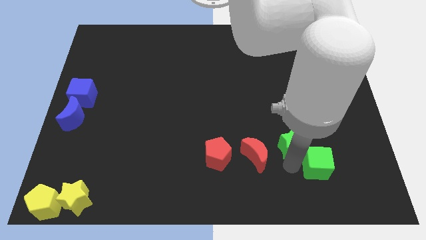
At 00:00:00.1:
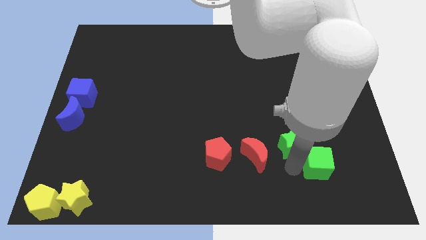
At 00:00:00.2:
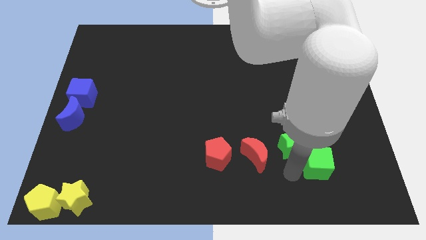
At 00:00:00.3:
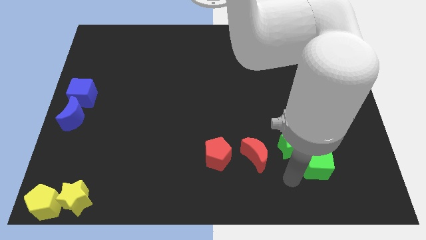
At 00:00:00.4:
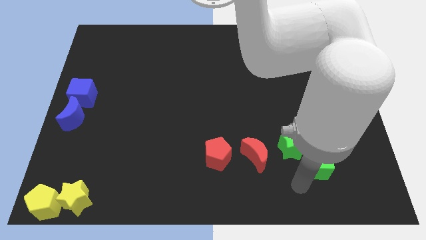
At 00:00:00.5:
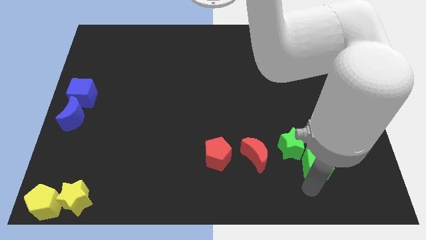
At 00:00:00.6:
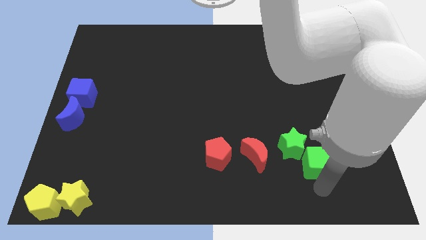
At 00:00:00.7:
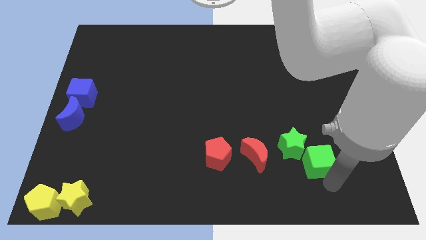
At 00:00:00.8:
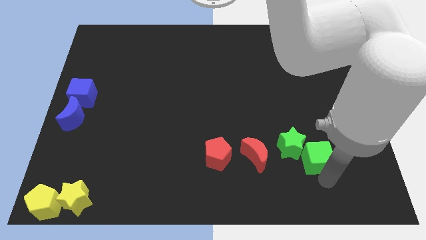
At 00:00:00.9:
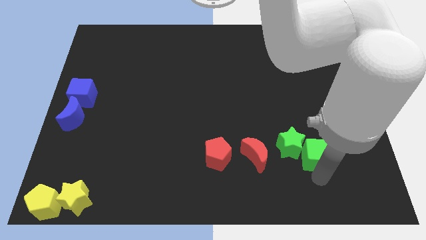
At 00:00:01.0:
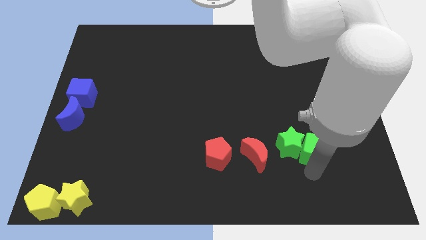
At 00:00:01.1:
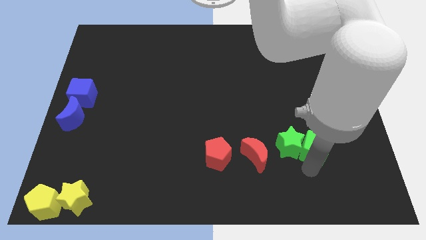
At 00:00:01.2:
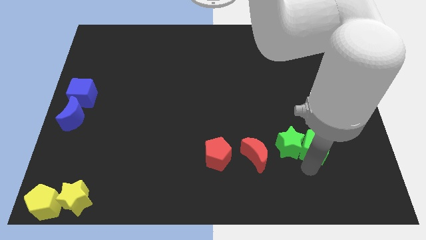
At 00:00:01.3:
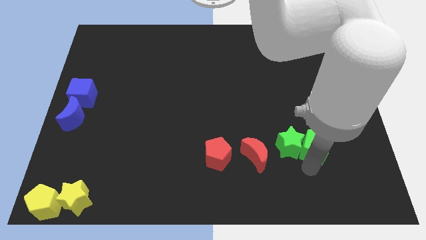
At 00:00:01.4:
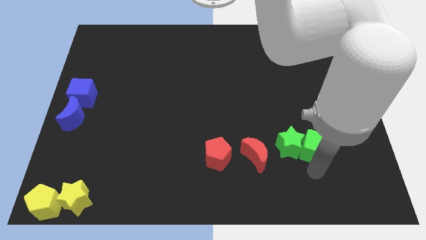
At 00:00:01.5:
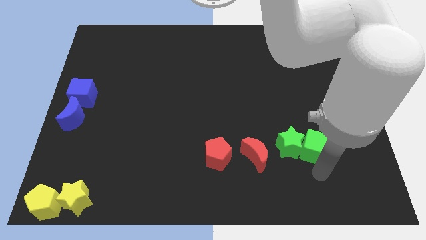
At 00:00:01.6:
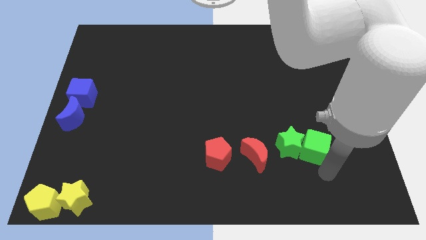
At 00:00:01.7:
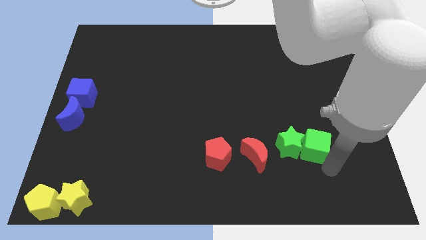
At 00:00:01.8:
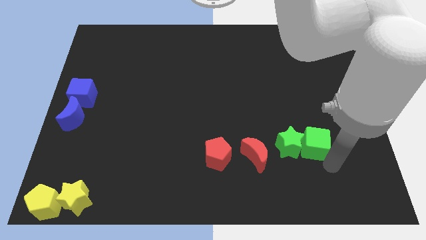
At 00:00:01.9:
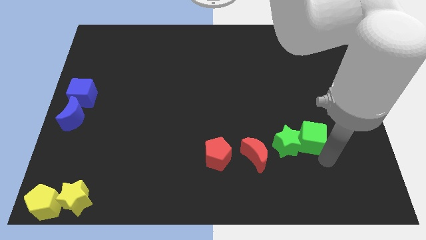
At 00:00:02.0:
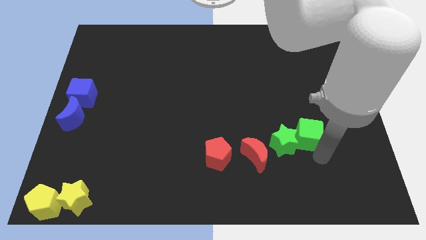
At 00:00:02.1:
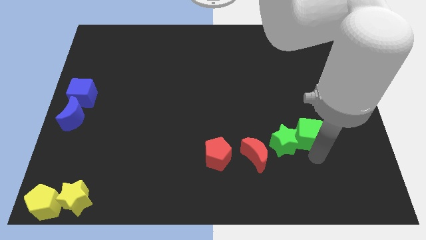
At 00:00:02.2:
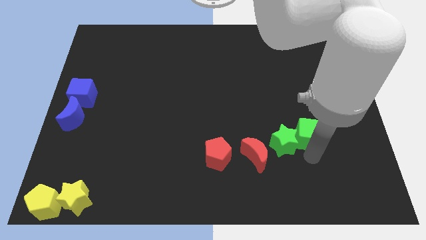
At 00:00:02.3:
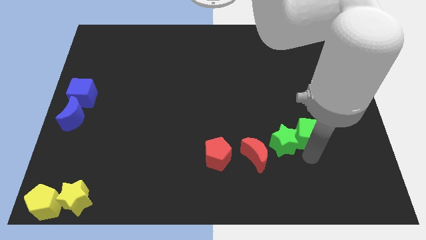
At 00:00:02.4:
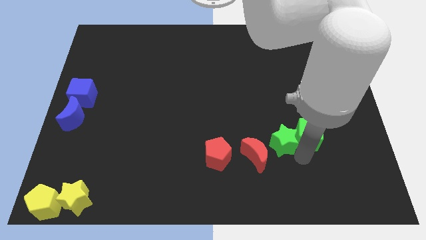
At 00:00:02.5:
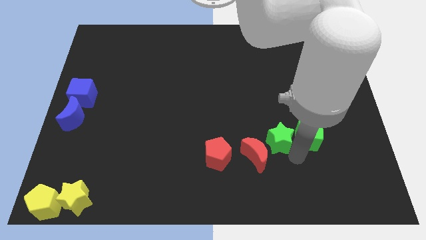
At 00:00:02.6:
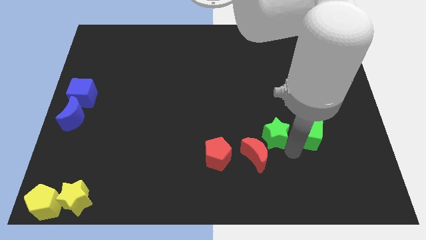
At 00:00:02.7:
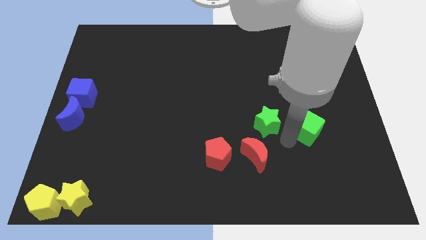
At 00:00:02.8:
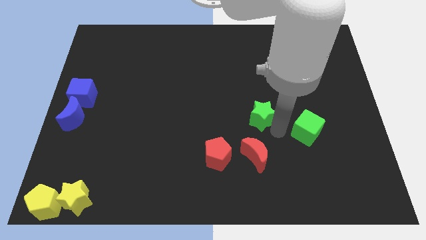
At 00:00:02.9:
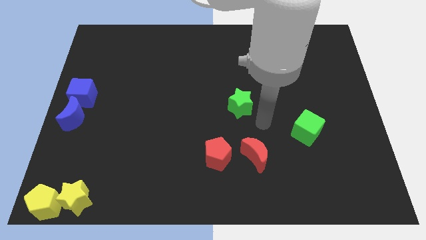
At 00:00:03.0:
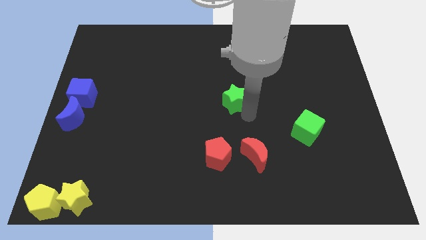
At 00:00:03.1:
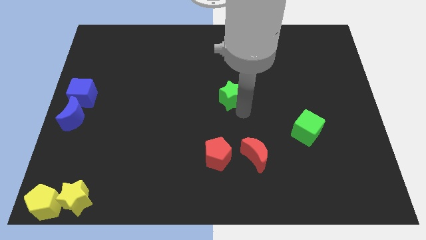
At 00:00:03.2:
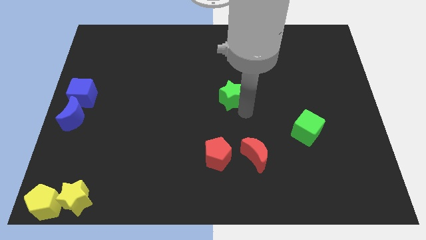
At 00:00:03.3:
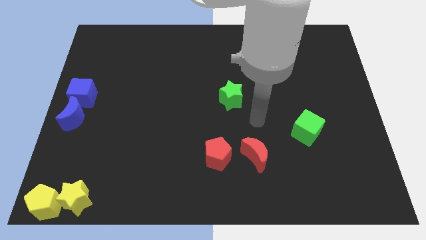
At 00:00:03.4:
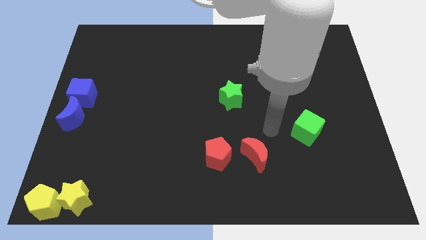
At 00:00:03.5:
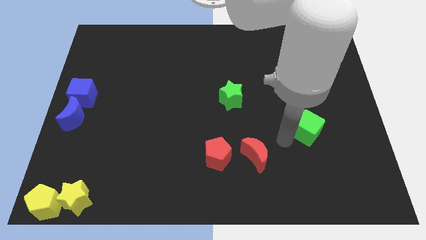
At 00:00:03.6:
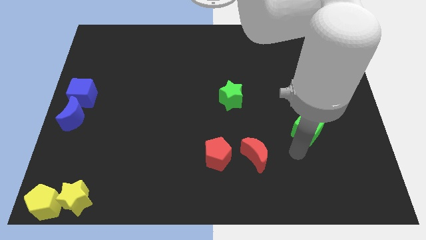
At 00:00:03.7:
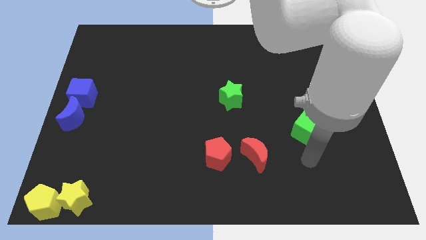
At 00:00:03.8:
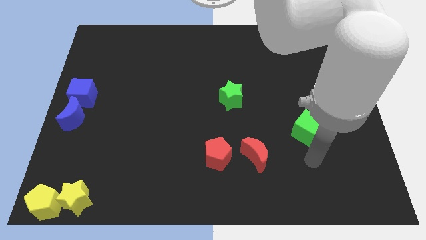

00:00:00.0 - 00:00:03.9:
separate the green star from the green cube

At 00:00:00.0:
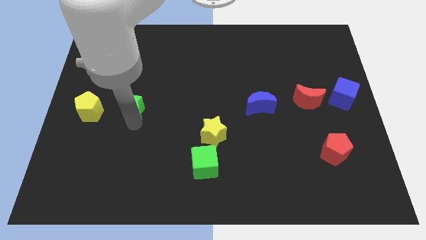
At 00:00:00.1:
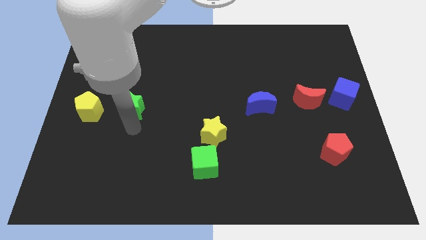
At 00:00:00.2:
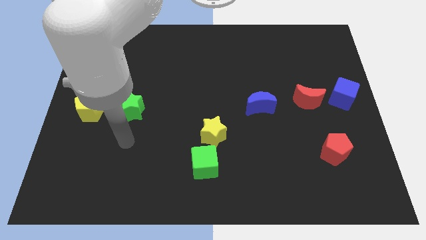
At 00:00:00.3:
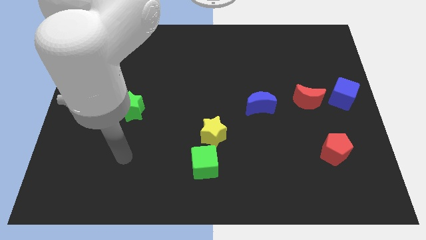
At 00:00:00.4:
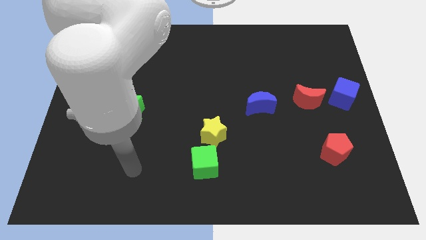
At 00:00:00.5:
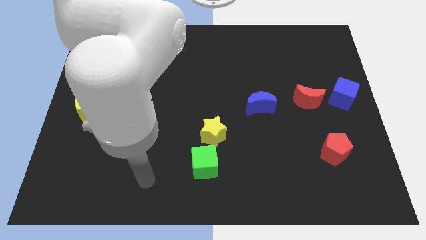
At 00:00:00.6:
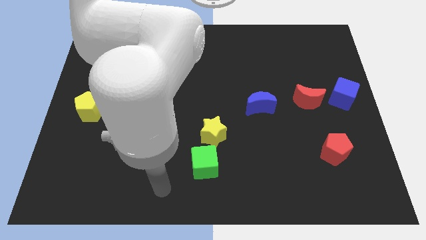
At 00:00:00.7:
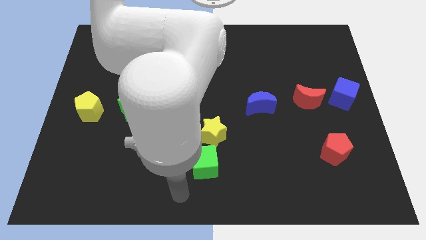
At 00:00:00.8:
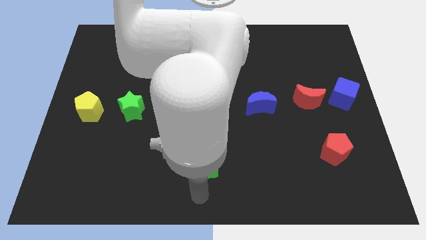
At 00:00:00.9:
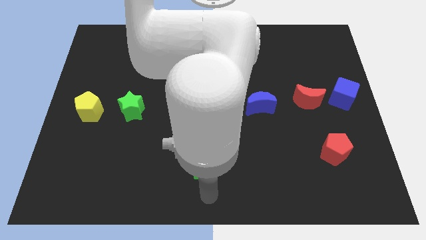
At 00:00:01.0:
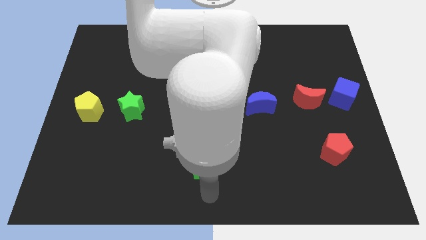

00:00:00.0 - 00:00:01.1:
move your arm away from the green star

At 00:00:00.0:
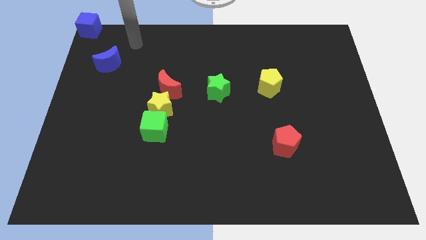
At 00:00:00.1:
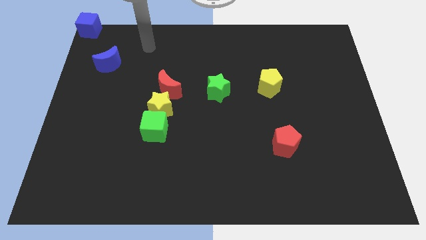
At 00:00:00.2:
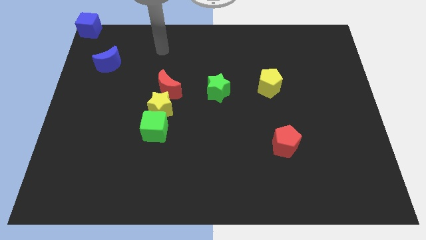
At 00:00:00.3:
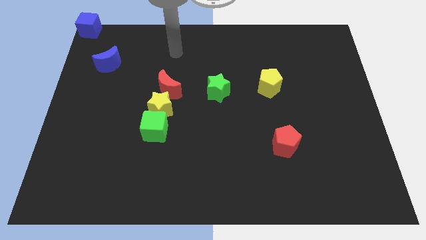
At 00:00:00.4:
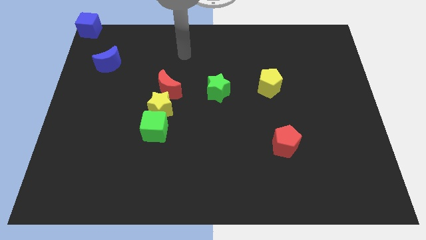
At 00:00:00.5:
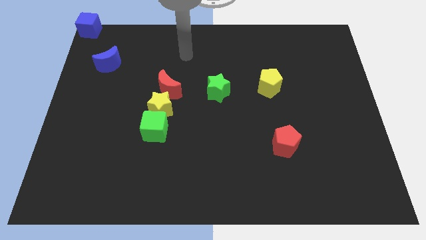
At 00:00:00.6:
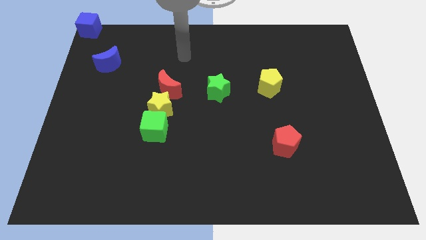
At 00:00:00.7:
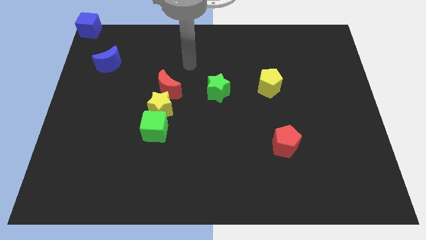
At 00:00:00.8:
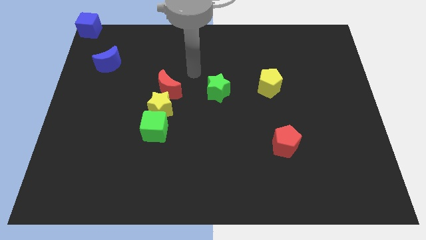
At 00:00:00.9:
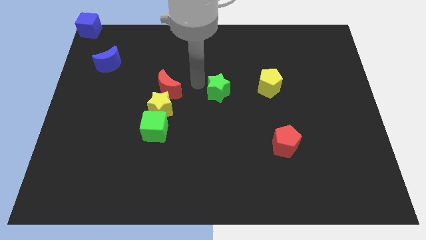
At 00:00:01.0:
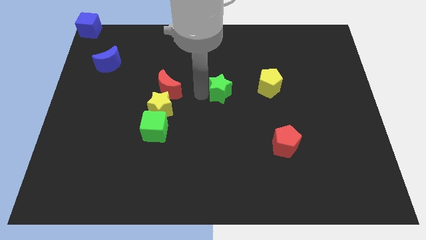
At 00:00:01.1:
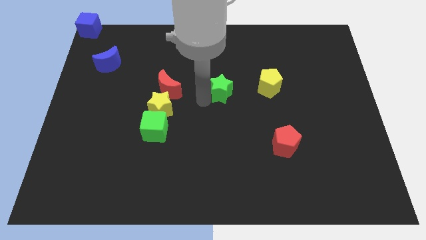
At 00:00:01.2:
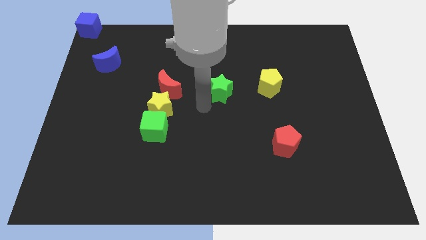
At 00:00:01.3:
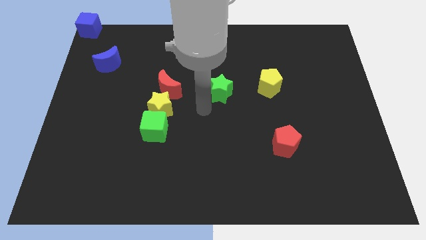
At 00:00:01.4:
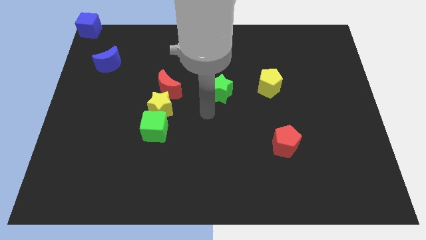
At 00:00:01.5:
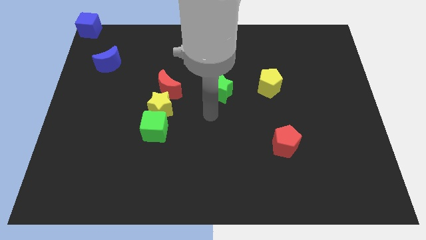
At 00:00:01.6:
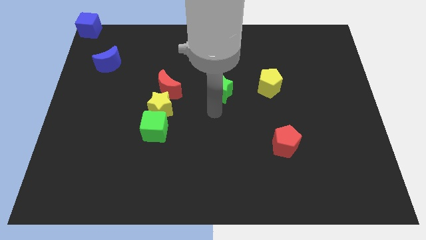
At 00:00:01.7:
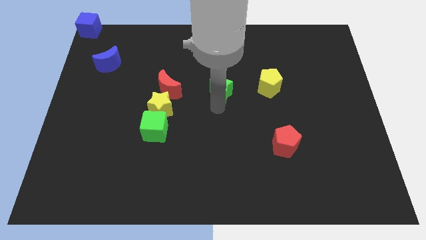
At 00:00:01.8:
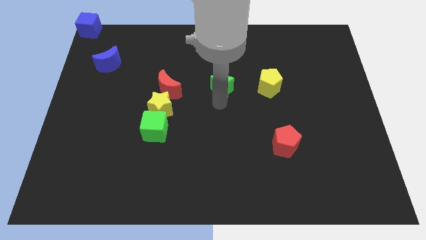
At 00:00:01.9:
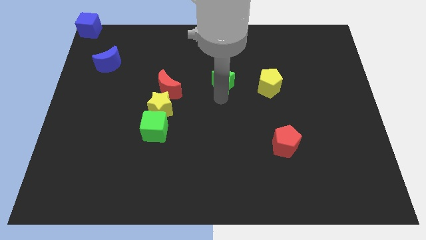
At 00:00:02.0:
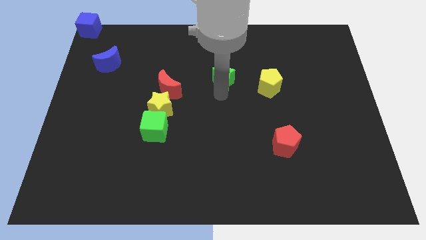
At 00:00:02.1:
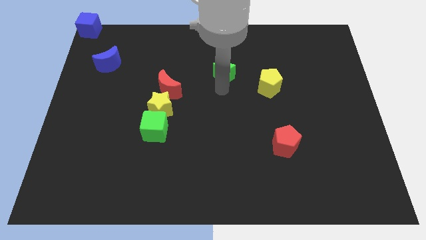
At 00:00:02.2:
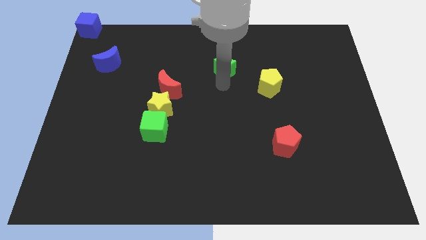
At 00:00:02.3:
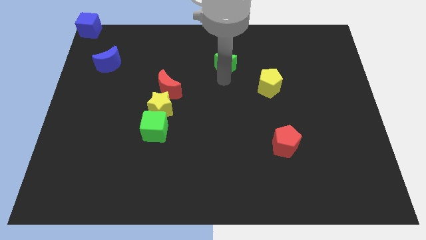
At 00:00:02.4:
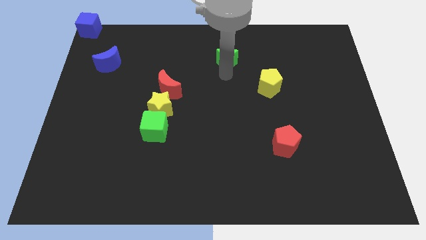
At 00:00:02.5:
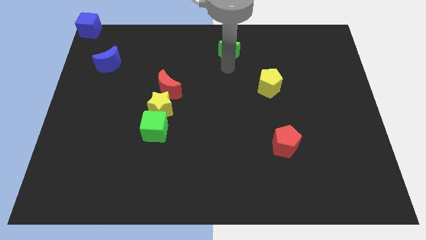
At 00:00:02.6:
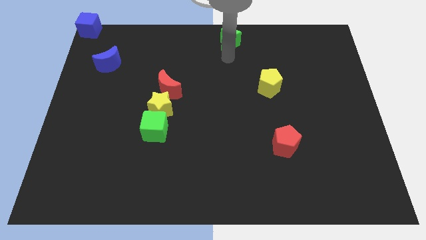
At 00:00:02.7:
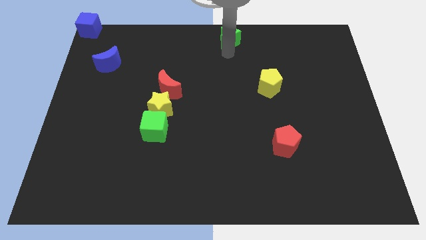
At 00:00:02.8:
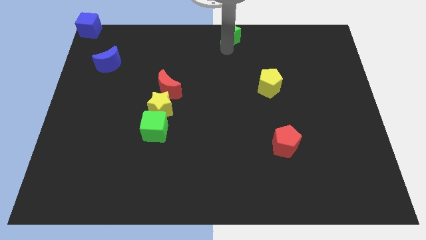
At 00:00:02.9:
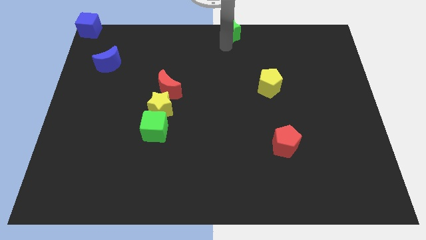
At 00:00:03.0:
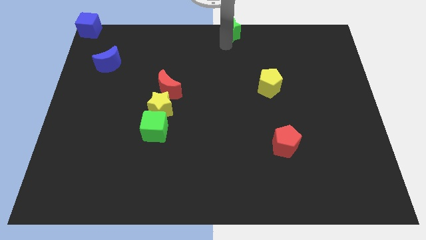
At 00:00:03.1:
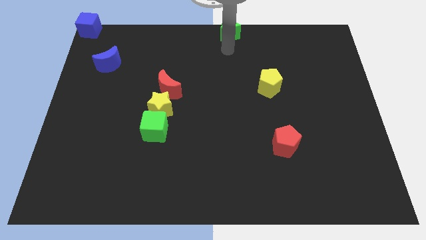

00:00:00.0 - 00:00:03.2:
place the green star at the top center of the board

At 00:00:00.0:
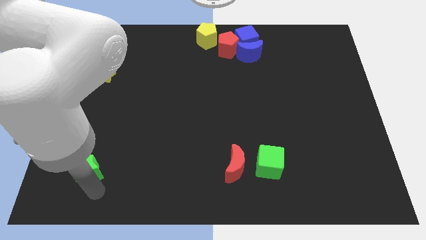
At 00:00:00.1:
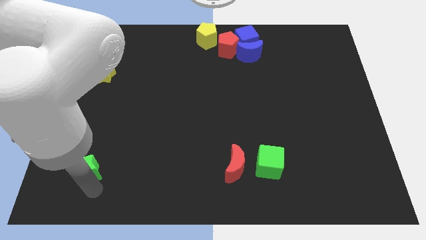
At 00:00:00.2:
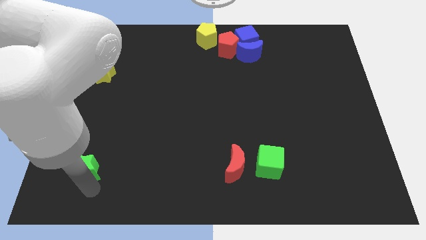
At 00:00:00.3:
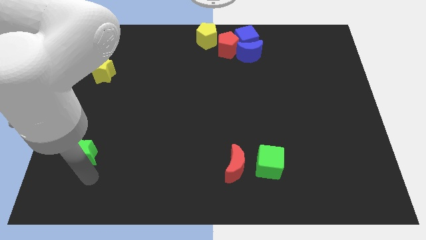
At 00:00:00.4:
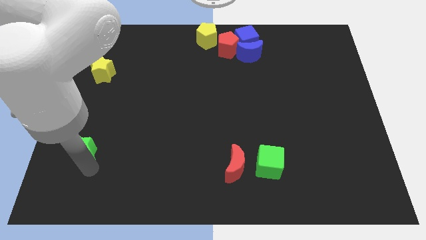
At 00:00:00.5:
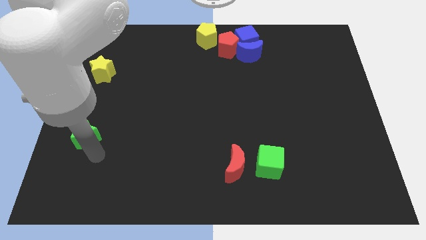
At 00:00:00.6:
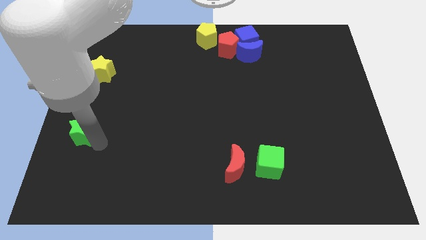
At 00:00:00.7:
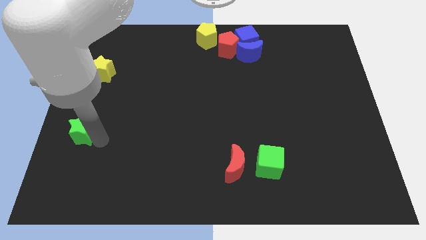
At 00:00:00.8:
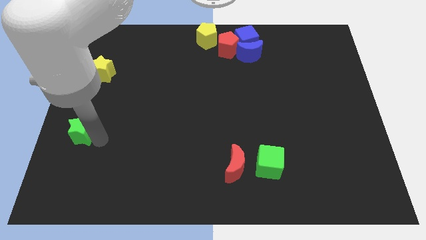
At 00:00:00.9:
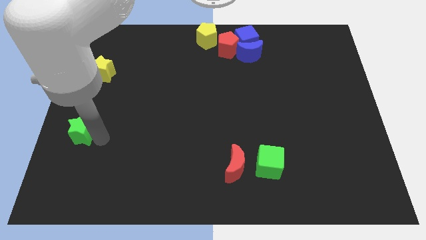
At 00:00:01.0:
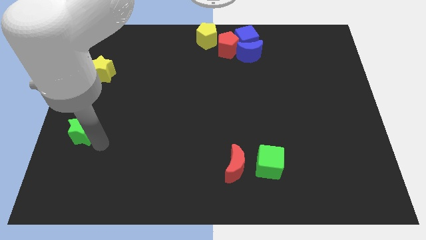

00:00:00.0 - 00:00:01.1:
move the greeen star below the yellow star
